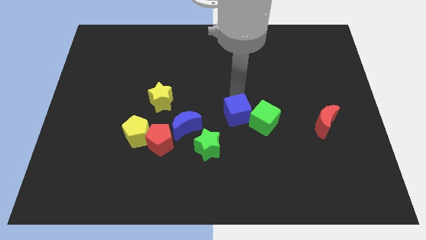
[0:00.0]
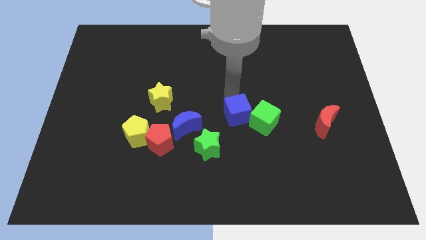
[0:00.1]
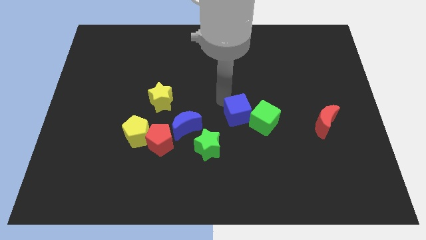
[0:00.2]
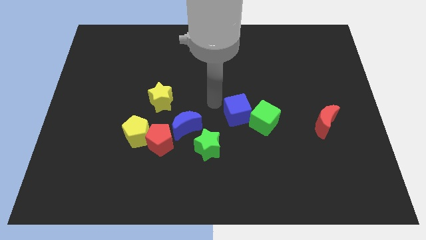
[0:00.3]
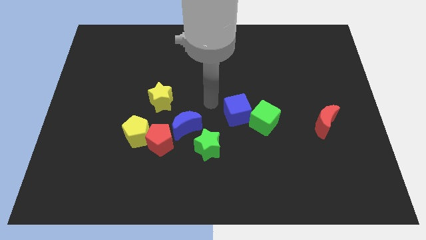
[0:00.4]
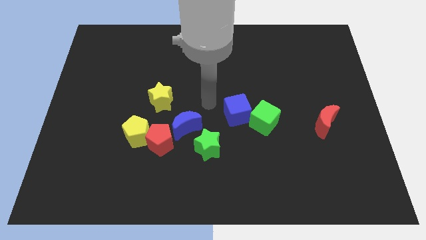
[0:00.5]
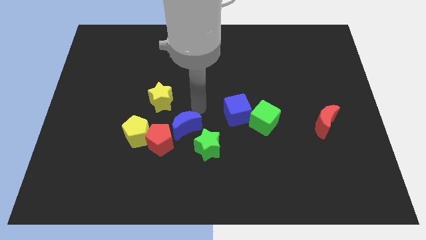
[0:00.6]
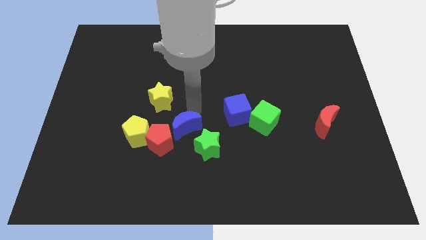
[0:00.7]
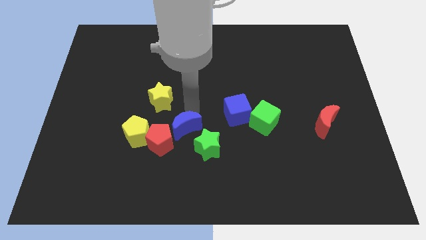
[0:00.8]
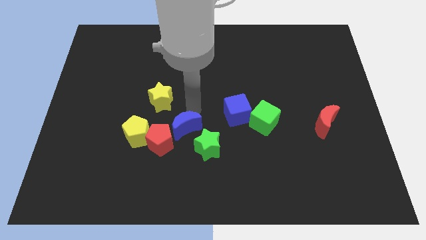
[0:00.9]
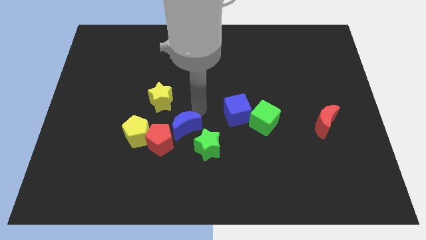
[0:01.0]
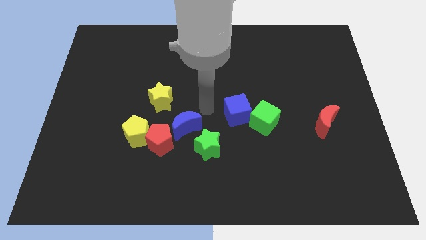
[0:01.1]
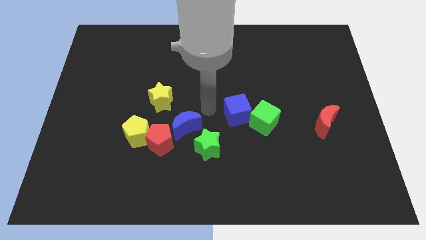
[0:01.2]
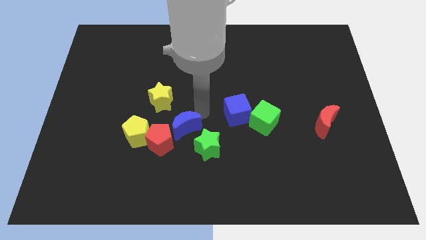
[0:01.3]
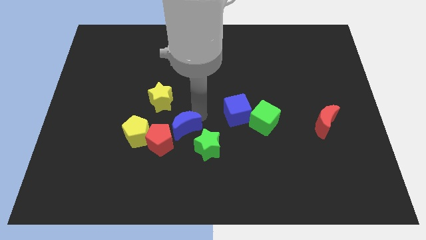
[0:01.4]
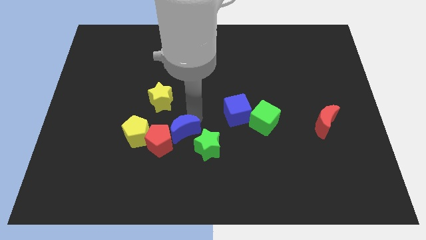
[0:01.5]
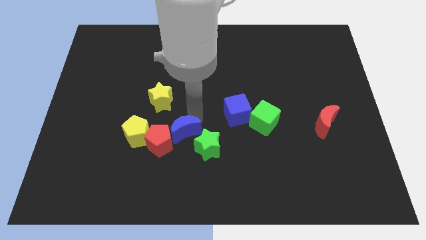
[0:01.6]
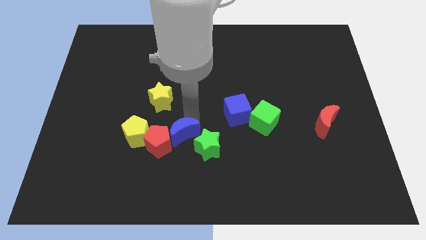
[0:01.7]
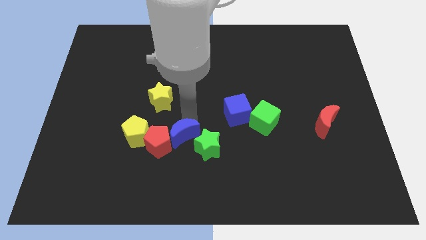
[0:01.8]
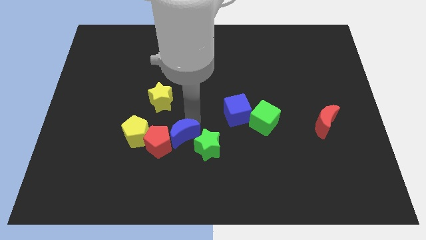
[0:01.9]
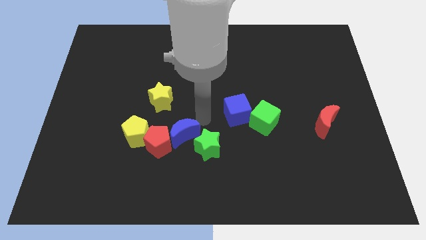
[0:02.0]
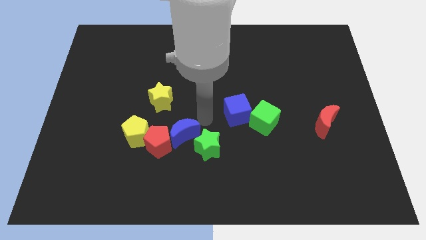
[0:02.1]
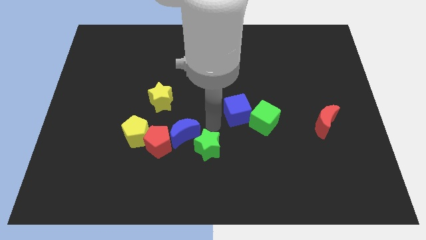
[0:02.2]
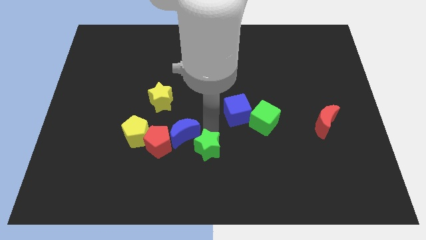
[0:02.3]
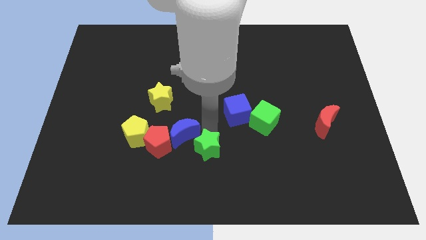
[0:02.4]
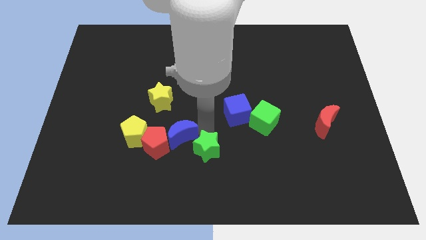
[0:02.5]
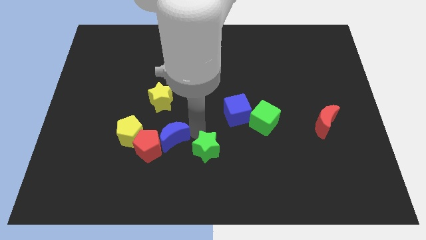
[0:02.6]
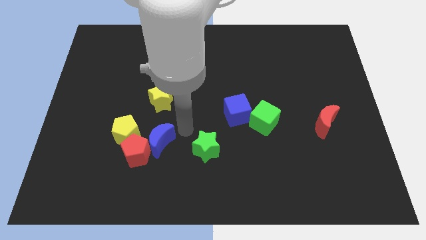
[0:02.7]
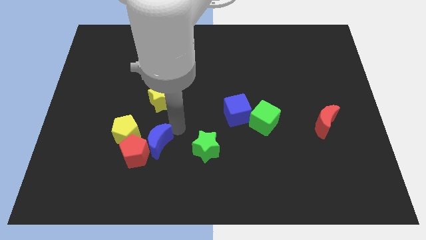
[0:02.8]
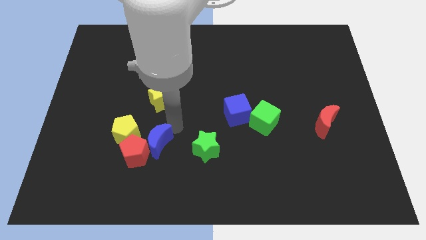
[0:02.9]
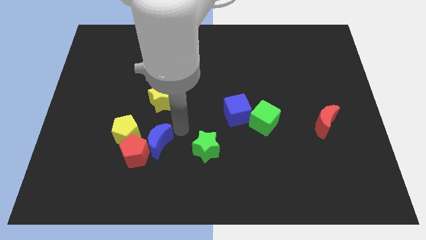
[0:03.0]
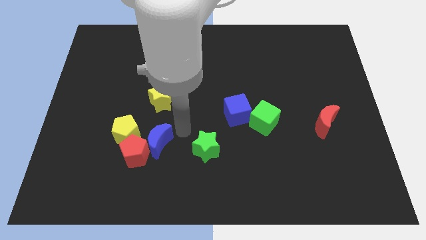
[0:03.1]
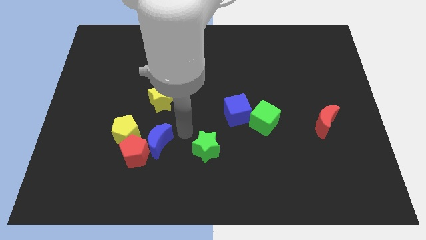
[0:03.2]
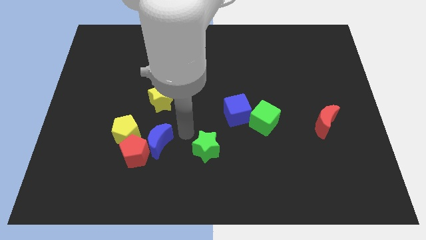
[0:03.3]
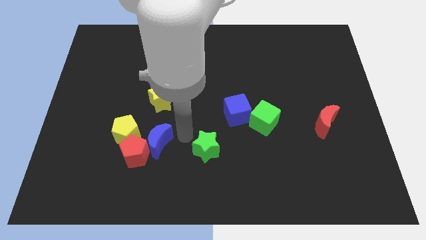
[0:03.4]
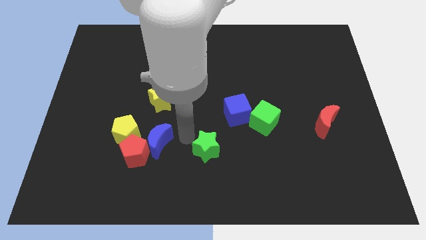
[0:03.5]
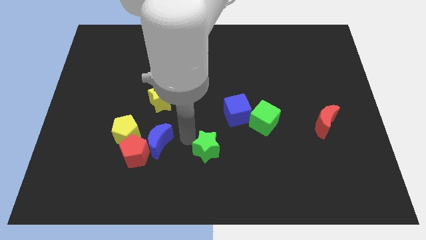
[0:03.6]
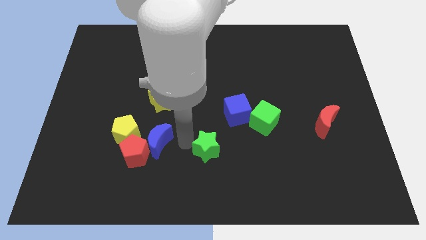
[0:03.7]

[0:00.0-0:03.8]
push the blue moon into the red pentagon

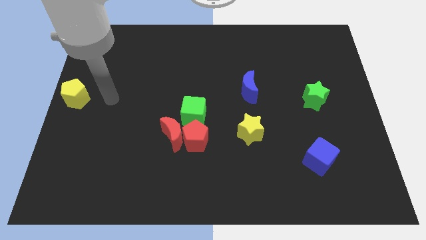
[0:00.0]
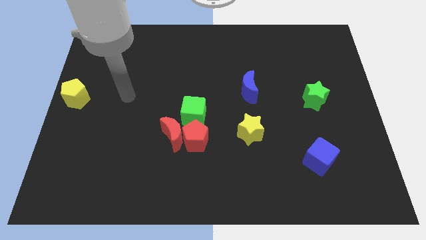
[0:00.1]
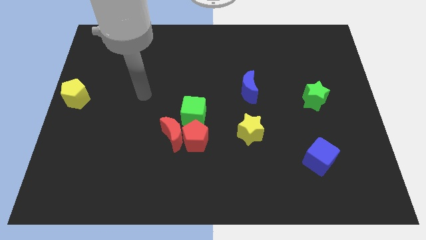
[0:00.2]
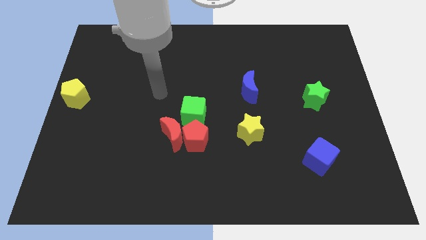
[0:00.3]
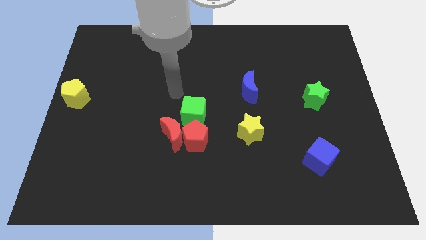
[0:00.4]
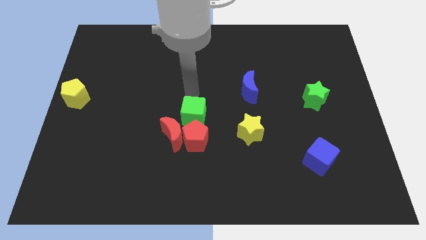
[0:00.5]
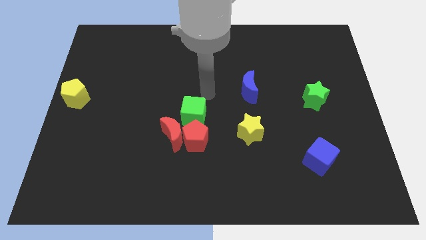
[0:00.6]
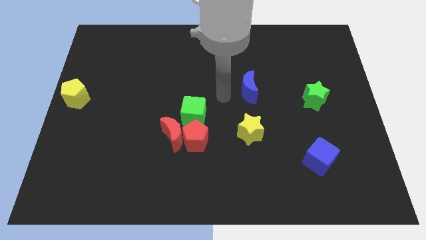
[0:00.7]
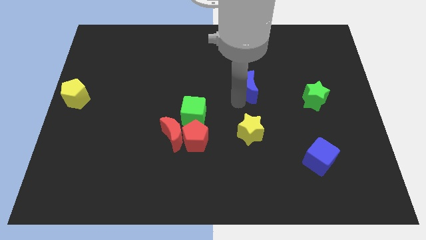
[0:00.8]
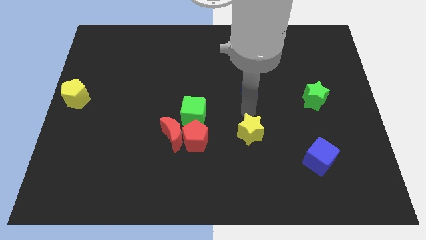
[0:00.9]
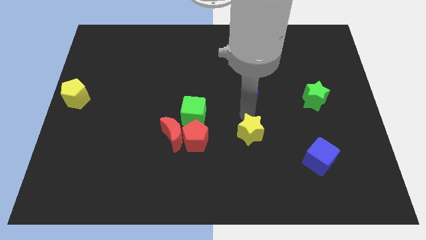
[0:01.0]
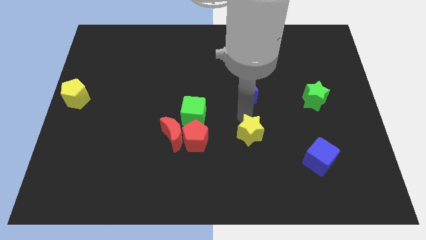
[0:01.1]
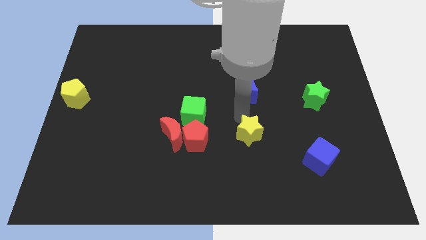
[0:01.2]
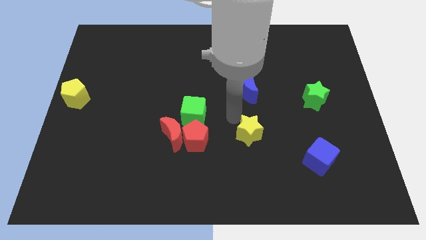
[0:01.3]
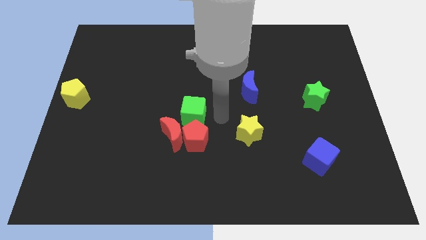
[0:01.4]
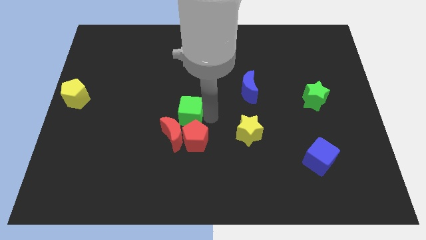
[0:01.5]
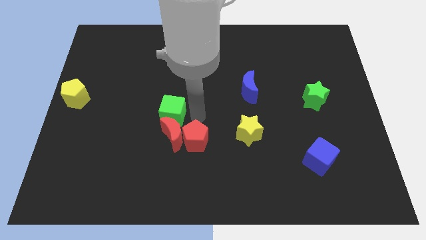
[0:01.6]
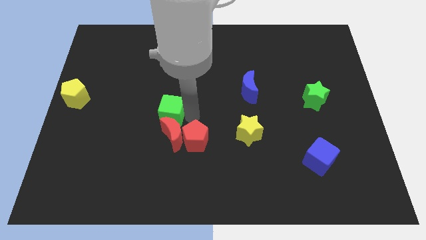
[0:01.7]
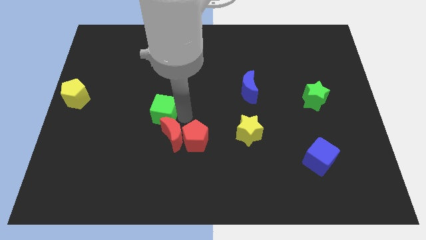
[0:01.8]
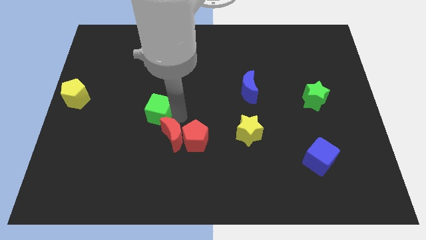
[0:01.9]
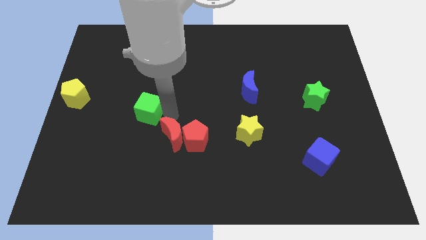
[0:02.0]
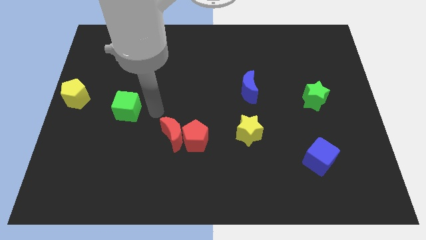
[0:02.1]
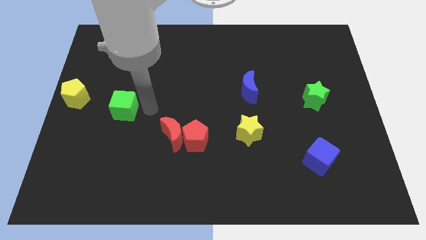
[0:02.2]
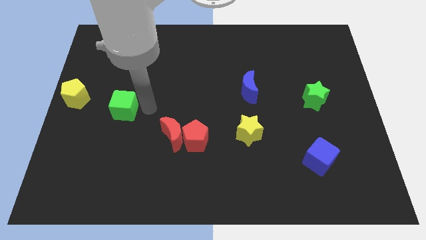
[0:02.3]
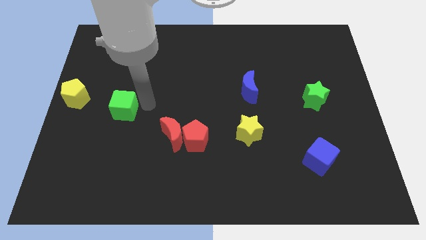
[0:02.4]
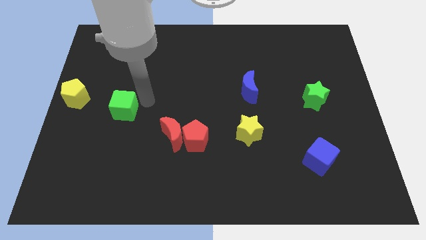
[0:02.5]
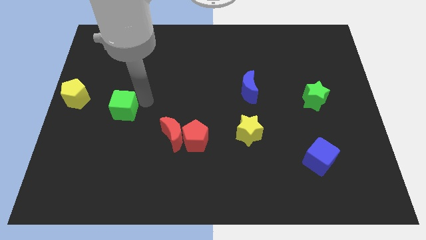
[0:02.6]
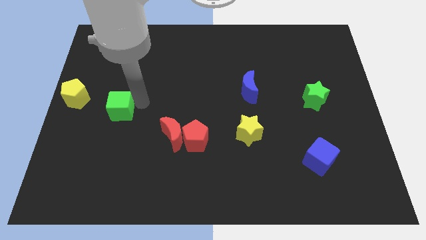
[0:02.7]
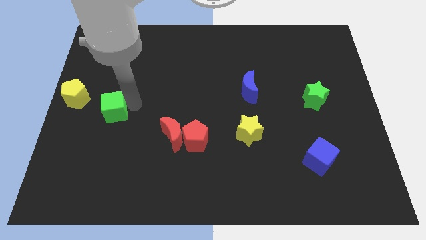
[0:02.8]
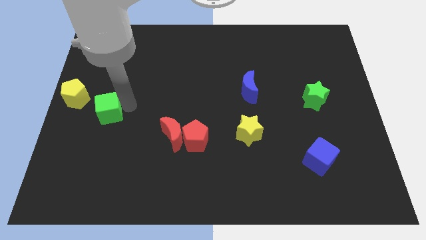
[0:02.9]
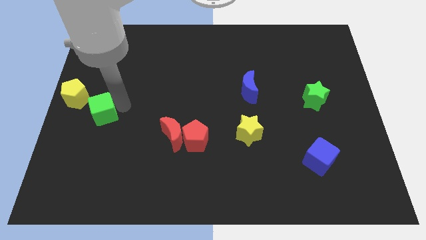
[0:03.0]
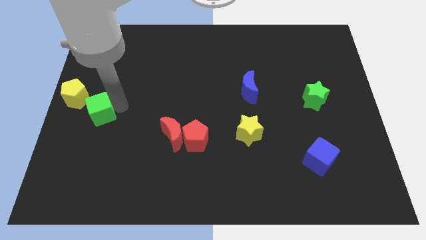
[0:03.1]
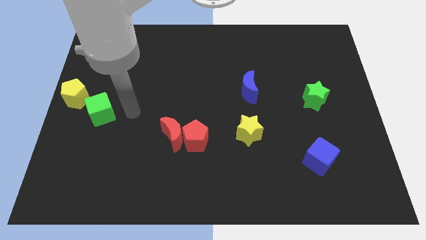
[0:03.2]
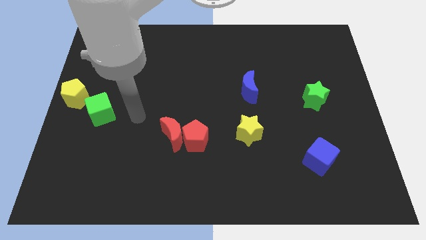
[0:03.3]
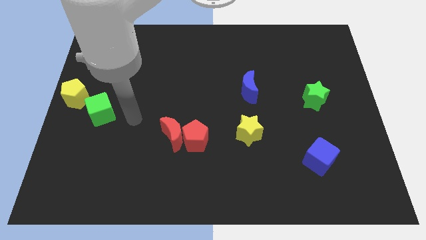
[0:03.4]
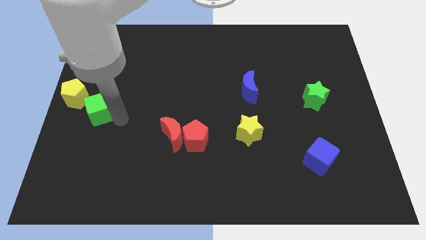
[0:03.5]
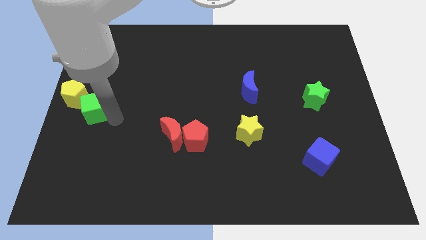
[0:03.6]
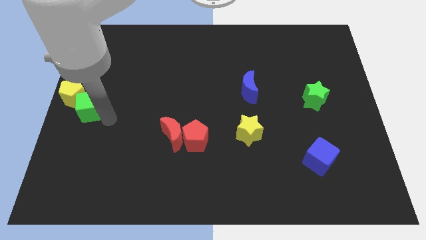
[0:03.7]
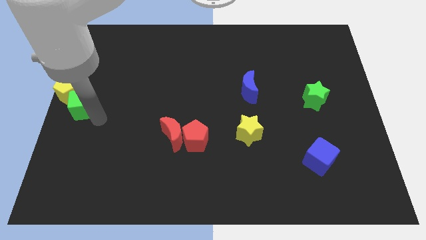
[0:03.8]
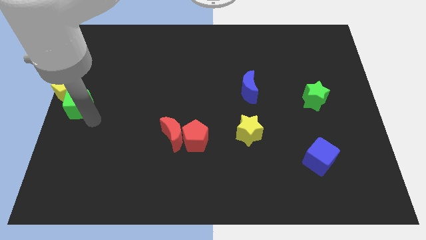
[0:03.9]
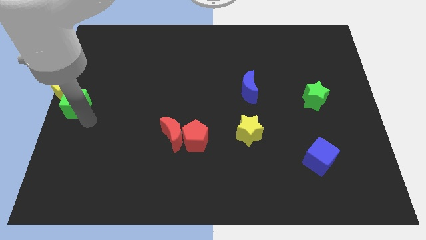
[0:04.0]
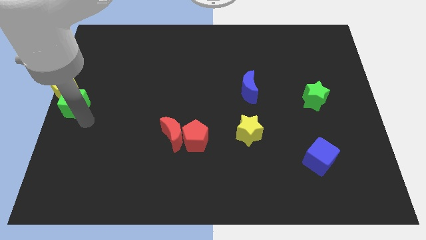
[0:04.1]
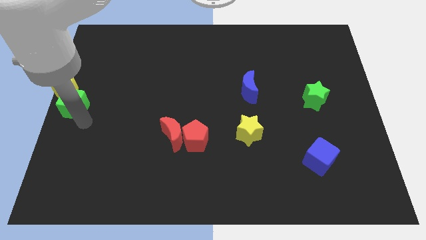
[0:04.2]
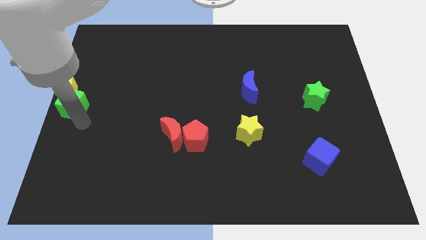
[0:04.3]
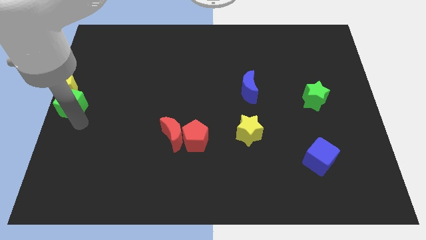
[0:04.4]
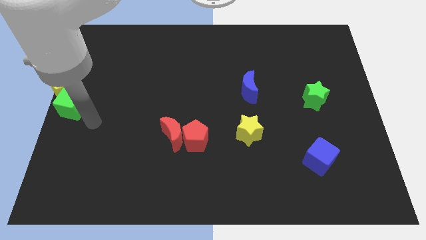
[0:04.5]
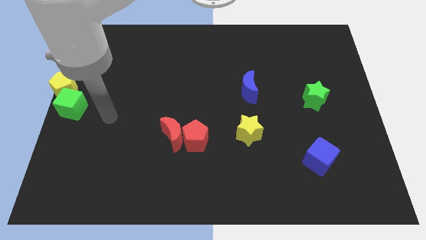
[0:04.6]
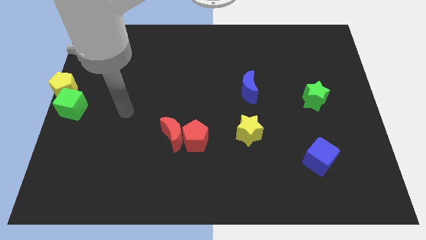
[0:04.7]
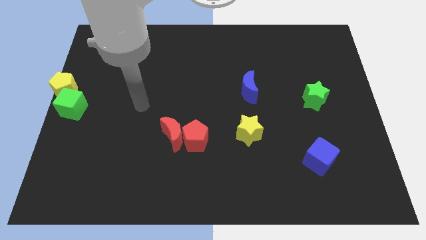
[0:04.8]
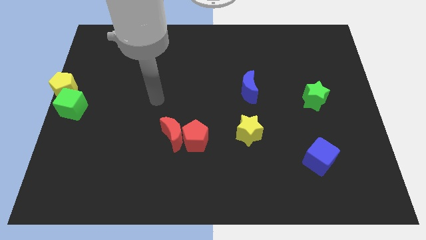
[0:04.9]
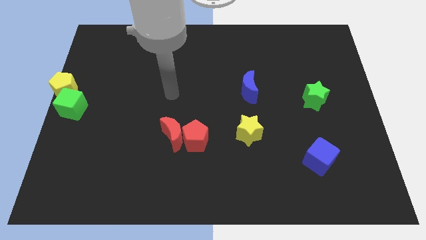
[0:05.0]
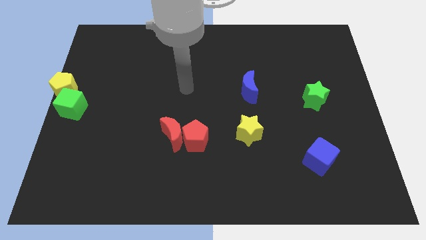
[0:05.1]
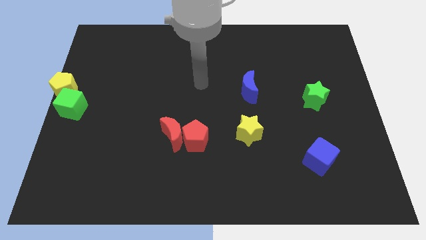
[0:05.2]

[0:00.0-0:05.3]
move green cube to the left center of the board

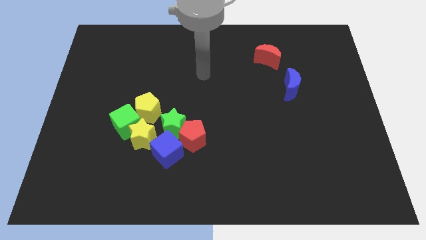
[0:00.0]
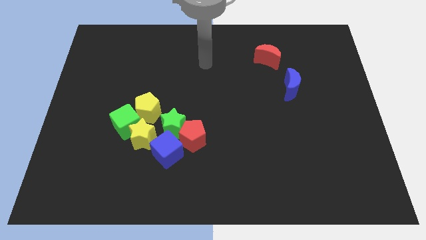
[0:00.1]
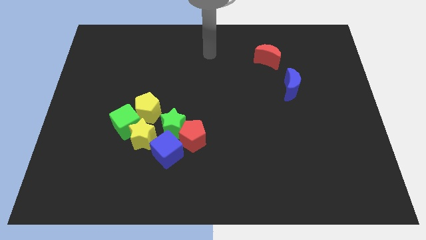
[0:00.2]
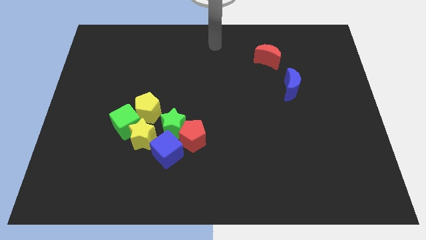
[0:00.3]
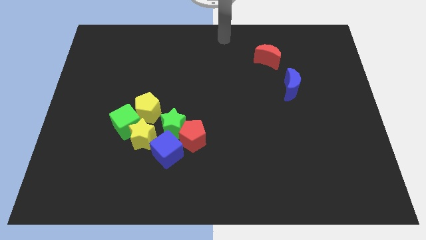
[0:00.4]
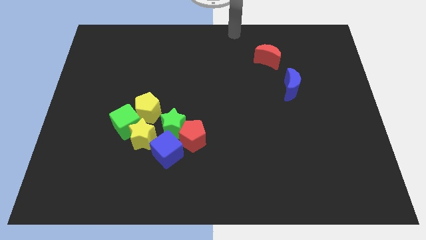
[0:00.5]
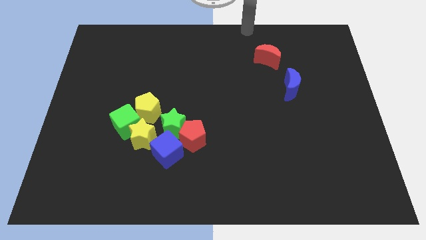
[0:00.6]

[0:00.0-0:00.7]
move your arm to top center
